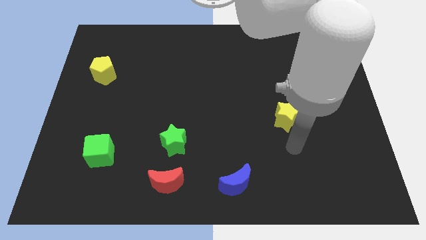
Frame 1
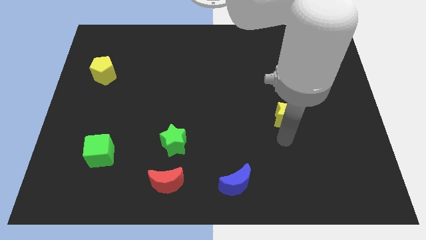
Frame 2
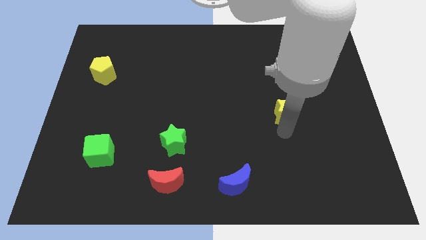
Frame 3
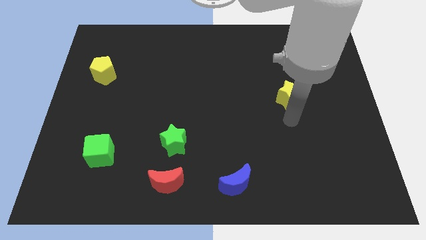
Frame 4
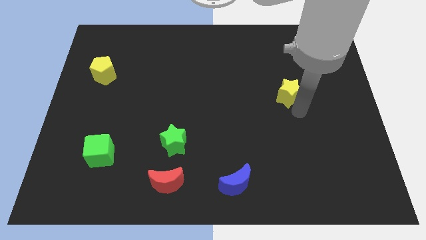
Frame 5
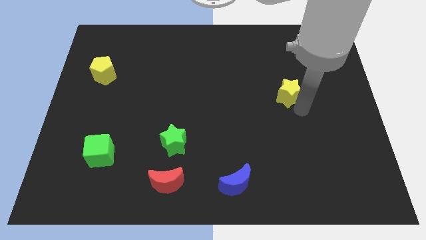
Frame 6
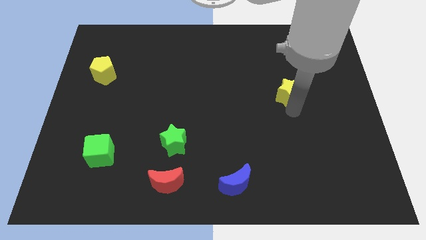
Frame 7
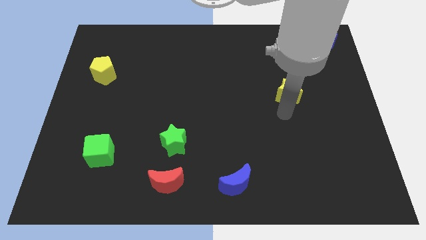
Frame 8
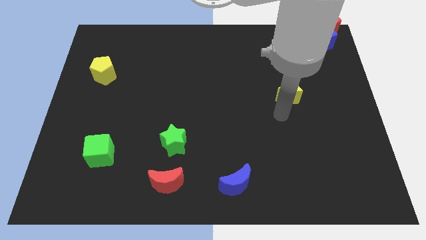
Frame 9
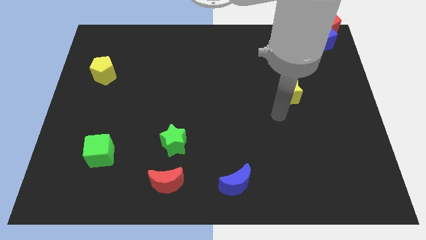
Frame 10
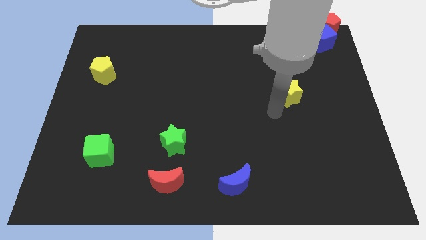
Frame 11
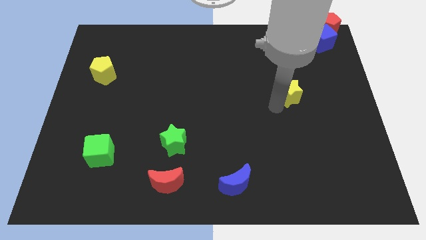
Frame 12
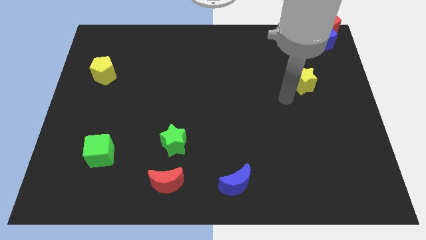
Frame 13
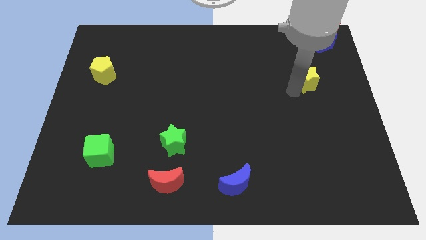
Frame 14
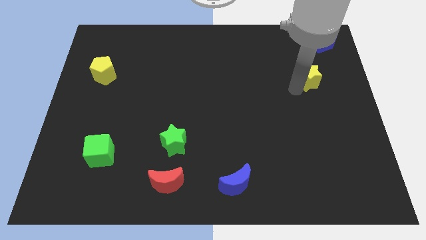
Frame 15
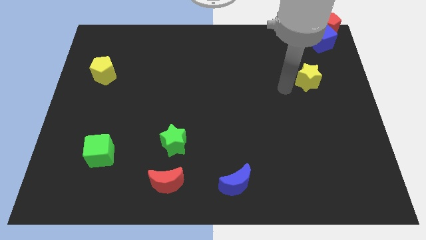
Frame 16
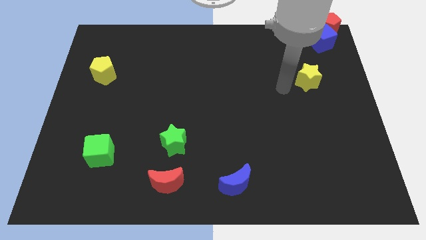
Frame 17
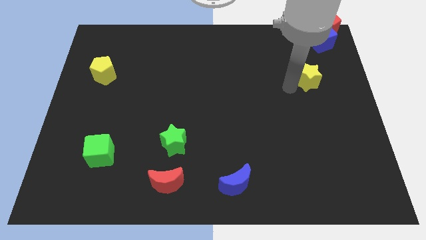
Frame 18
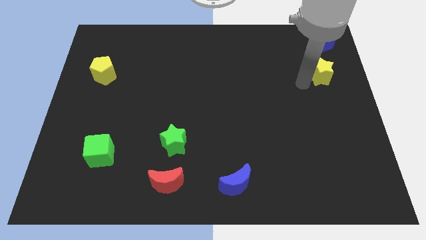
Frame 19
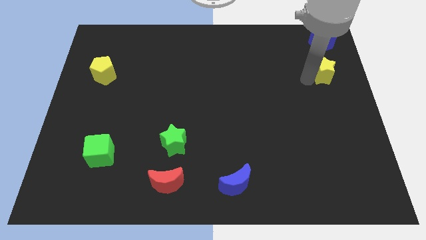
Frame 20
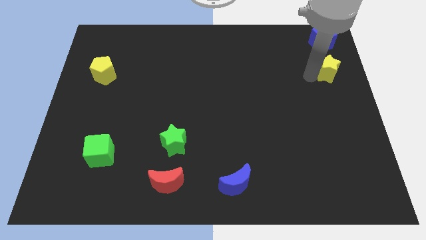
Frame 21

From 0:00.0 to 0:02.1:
move the yellow star to the bottom of the blue cube

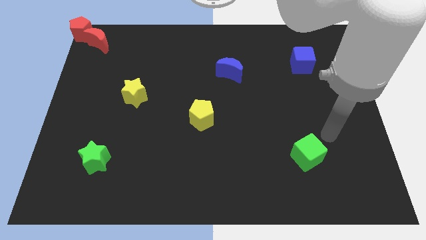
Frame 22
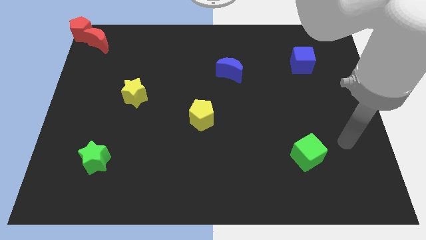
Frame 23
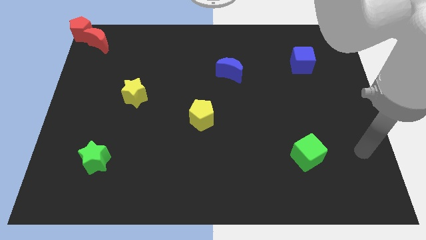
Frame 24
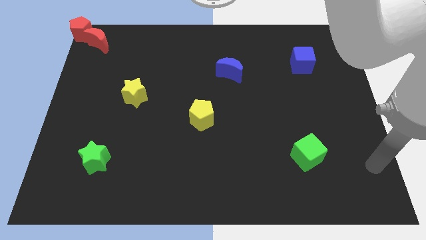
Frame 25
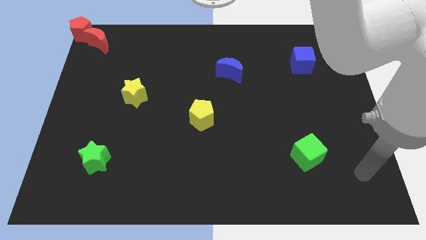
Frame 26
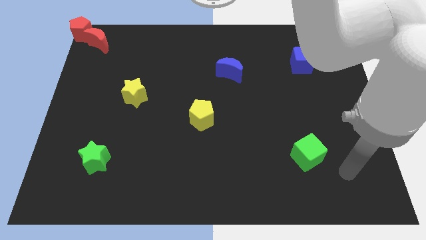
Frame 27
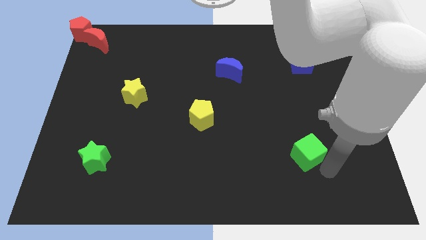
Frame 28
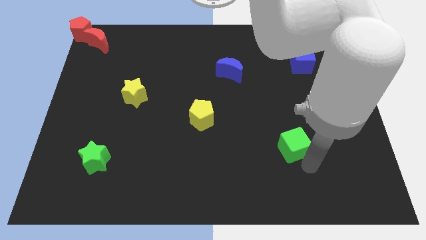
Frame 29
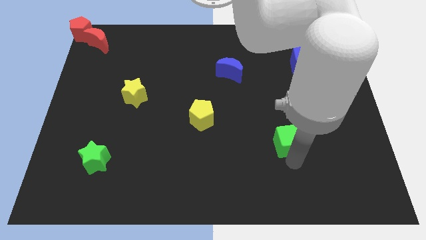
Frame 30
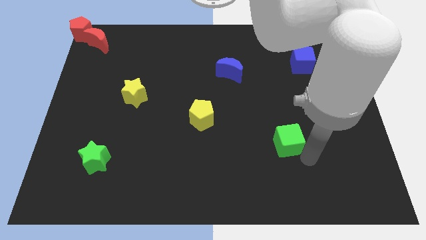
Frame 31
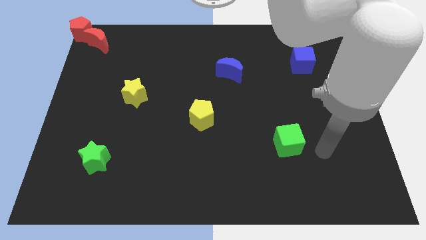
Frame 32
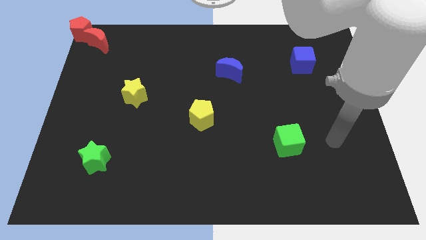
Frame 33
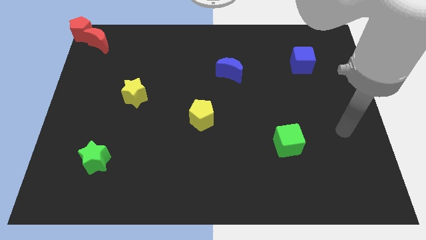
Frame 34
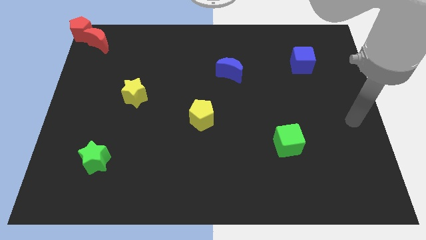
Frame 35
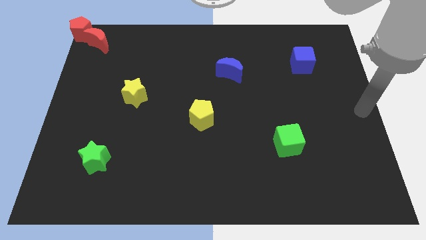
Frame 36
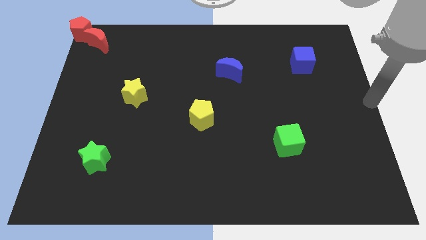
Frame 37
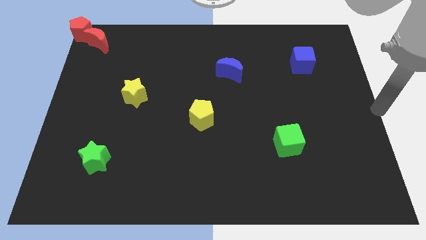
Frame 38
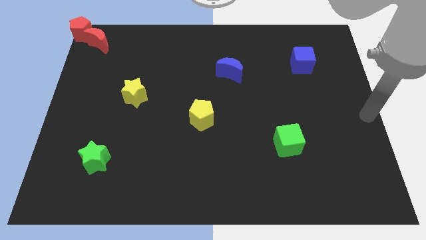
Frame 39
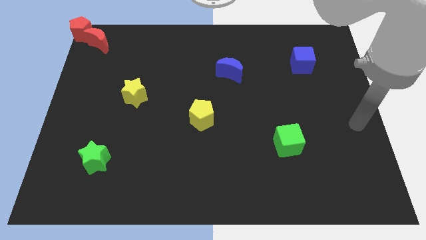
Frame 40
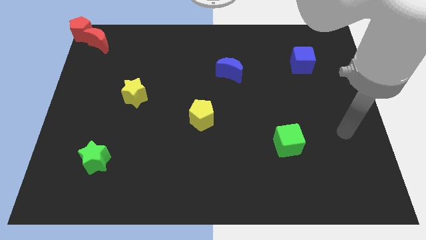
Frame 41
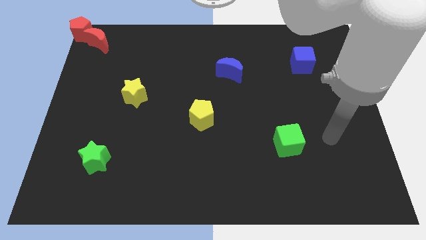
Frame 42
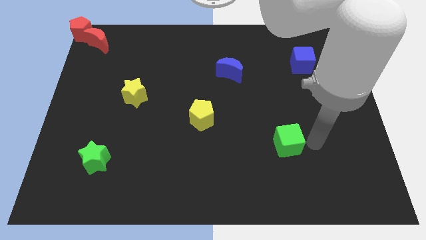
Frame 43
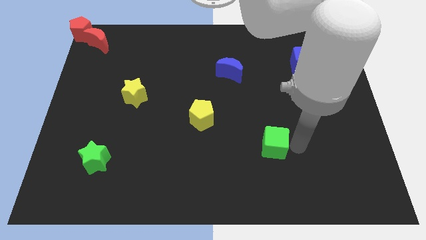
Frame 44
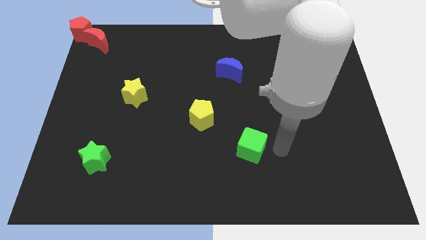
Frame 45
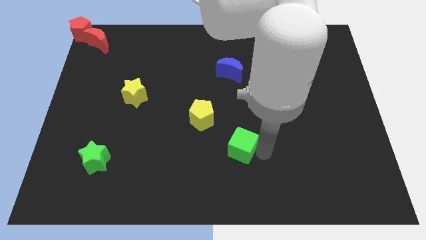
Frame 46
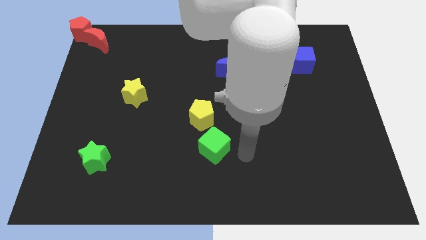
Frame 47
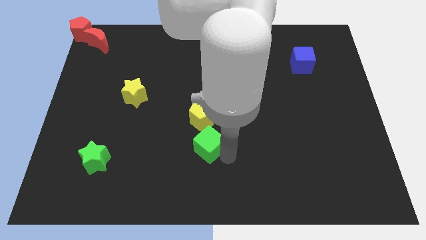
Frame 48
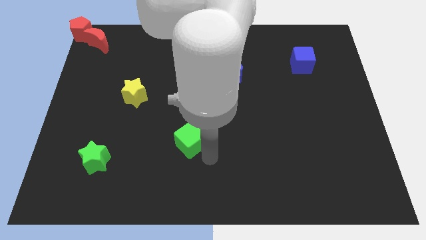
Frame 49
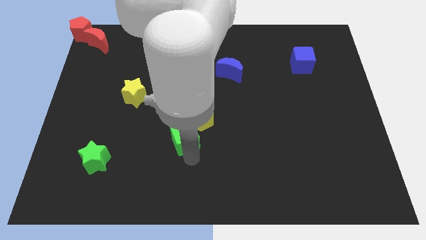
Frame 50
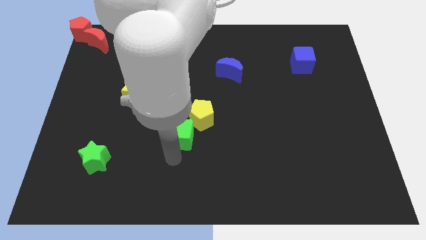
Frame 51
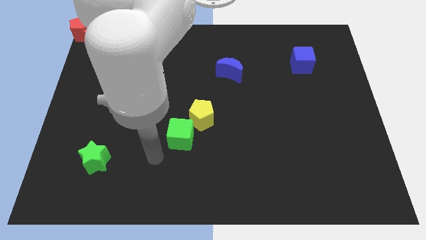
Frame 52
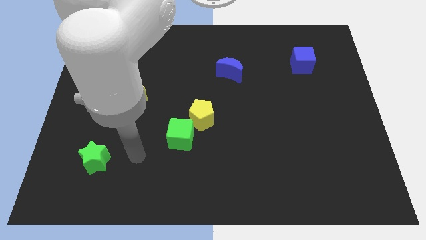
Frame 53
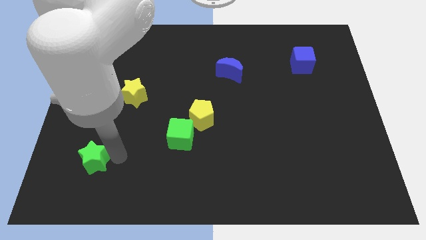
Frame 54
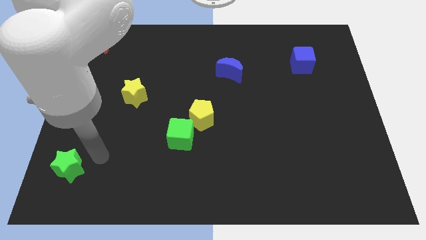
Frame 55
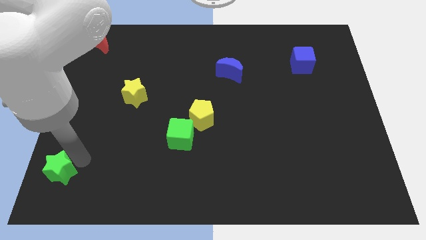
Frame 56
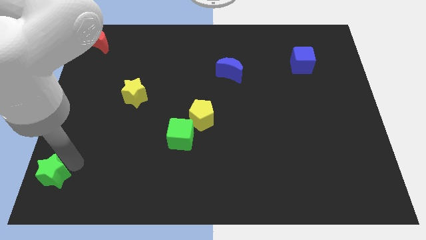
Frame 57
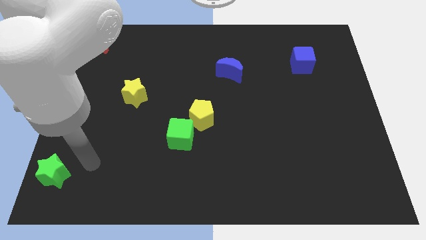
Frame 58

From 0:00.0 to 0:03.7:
place the green cube near to the left of the yellow pentagon

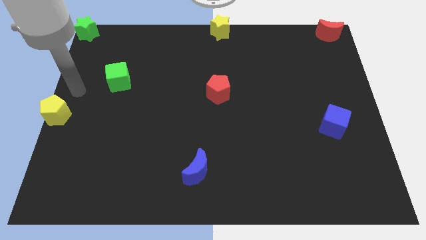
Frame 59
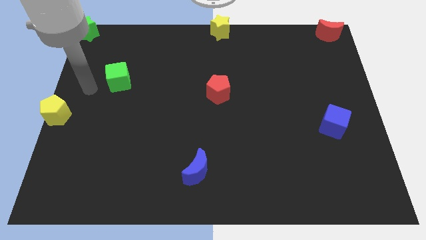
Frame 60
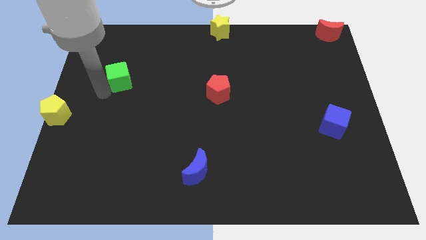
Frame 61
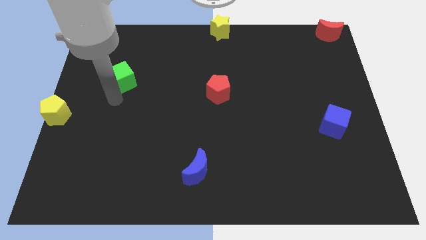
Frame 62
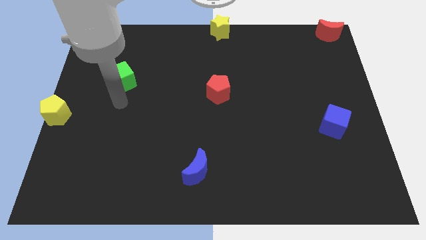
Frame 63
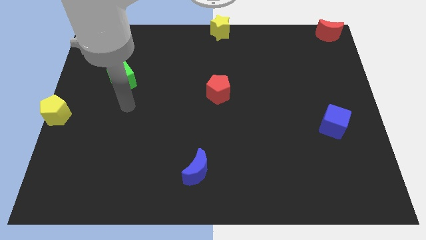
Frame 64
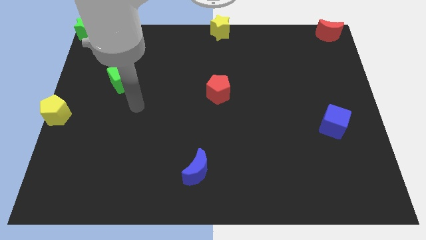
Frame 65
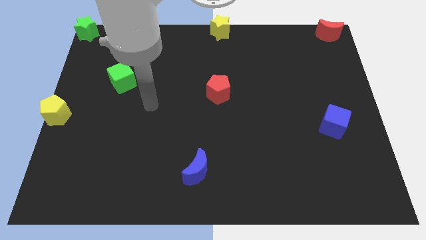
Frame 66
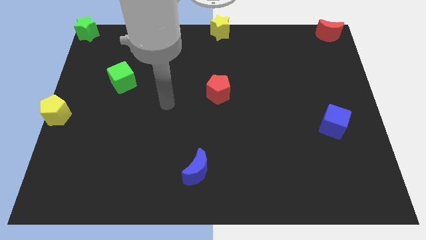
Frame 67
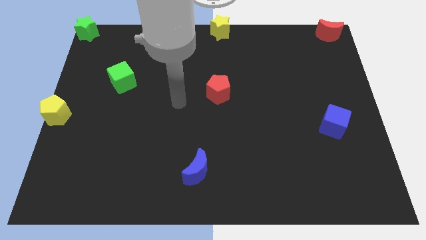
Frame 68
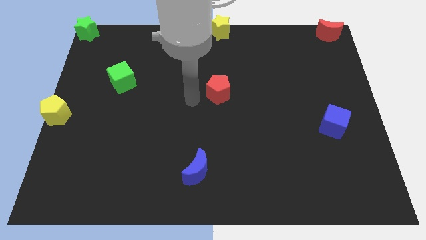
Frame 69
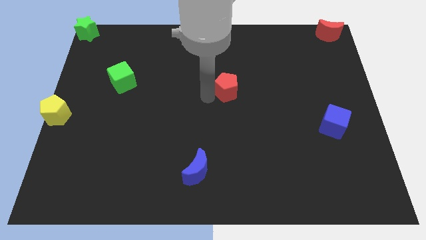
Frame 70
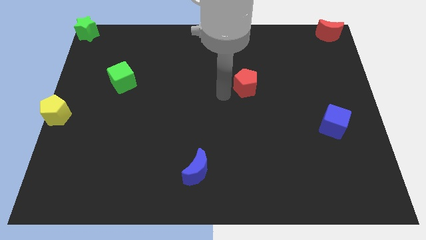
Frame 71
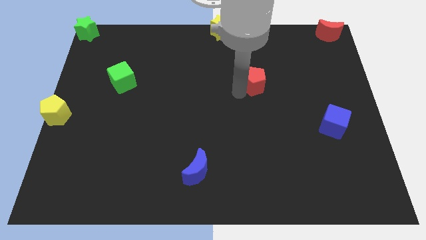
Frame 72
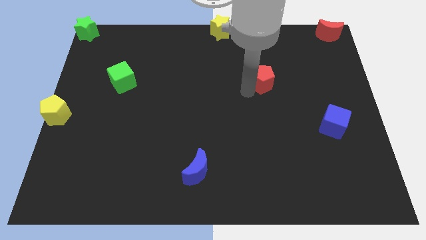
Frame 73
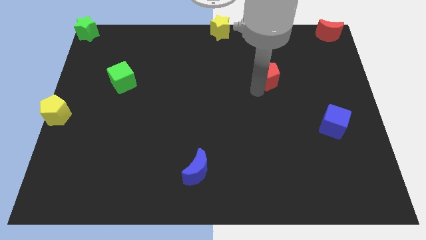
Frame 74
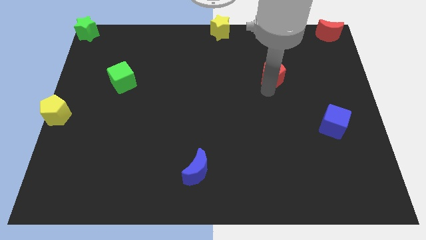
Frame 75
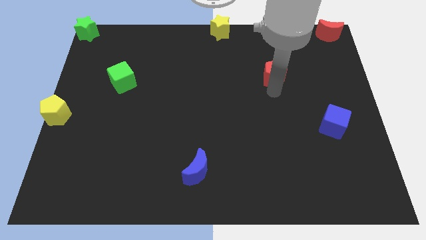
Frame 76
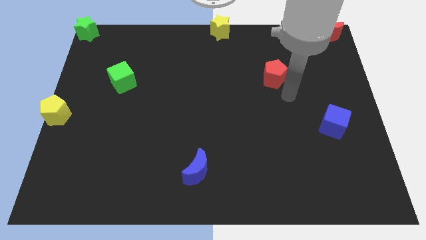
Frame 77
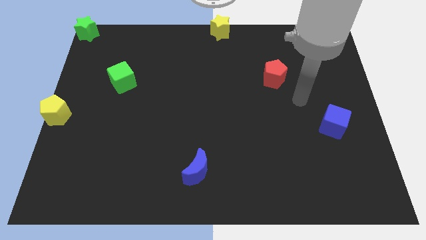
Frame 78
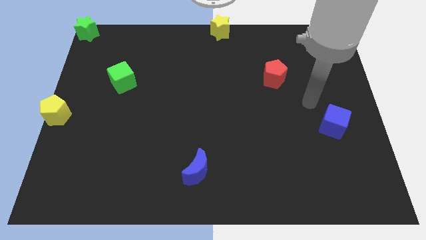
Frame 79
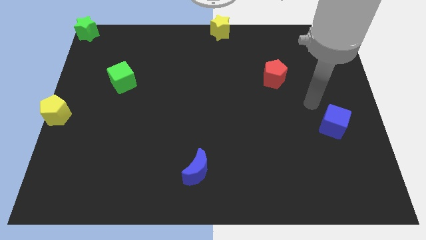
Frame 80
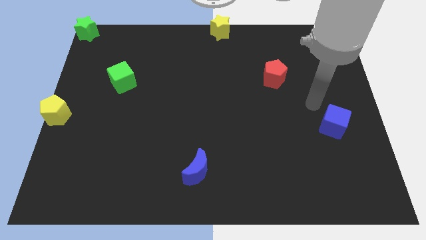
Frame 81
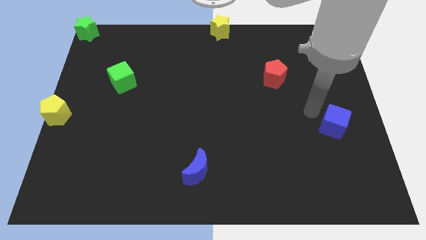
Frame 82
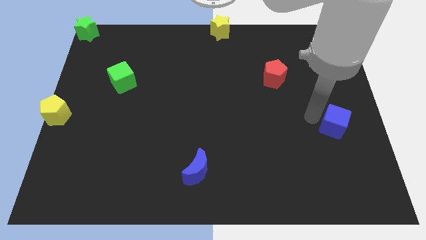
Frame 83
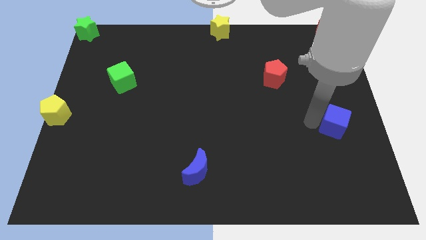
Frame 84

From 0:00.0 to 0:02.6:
place red pentagon to the bottom right of the yellow star

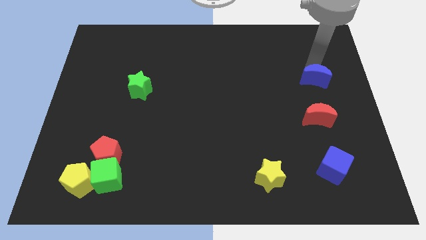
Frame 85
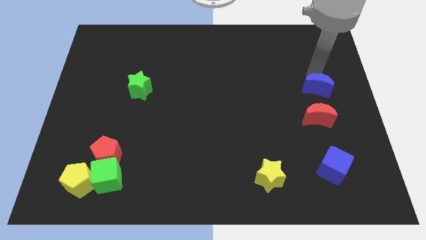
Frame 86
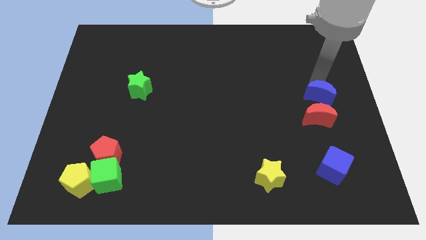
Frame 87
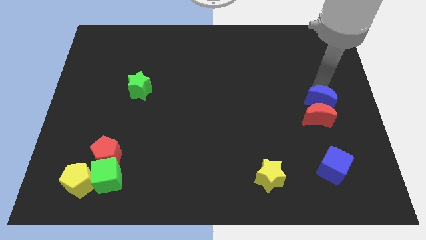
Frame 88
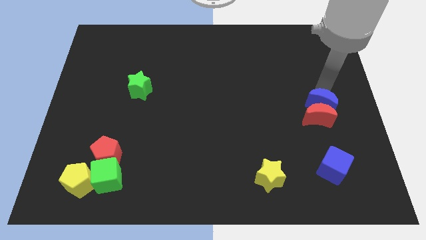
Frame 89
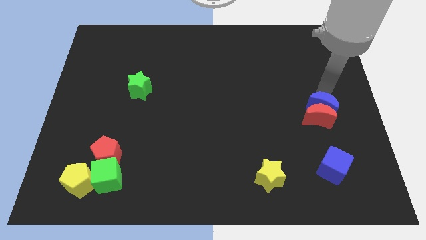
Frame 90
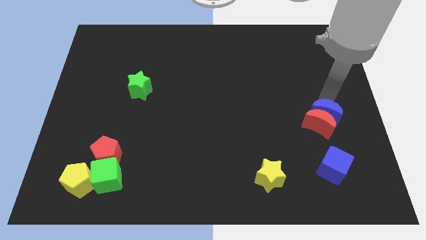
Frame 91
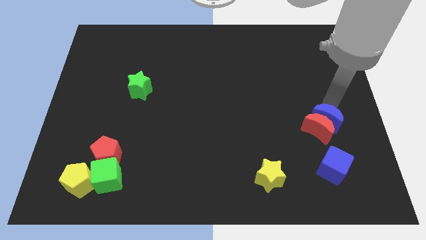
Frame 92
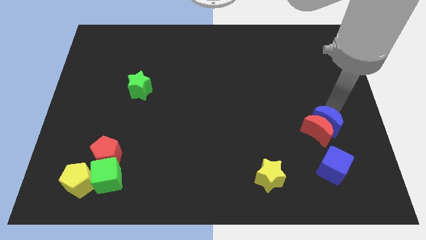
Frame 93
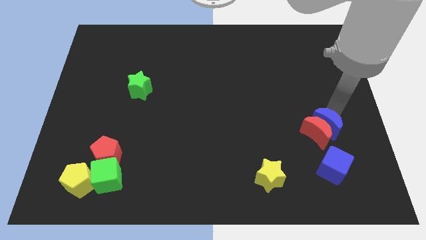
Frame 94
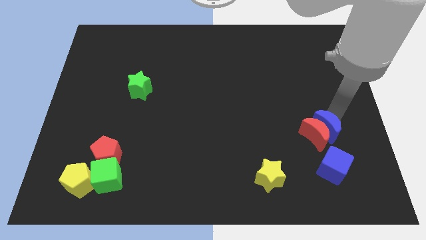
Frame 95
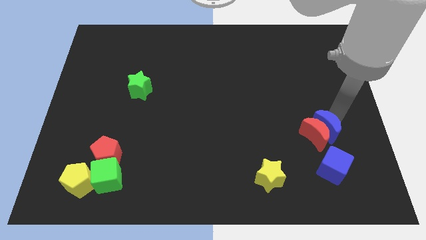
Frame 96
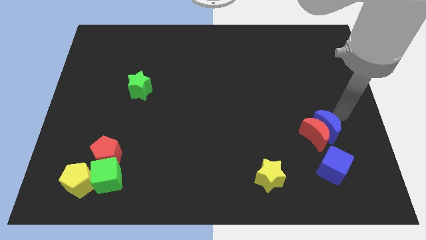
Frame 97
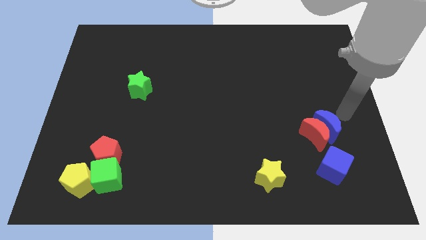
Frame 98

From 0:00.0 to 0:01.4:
move the blue crescent into the red crescent
